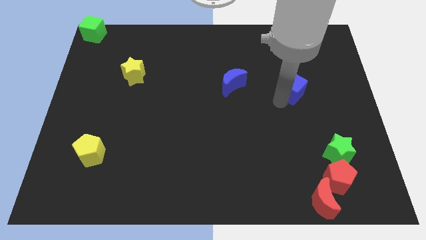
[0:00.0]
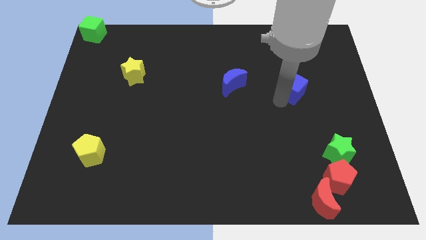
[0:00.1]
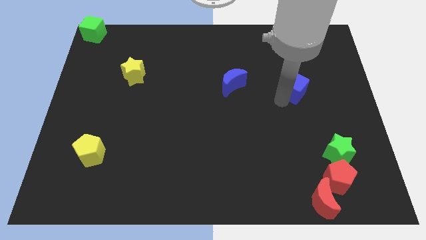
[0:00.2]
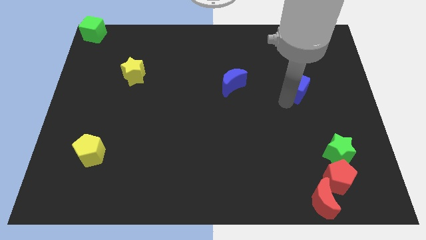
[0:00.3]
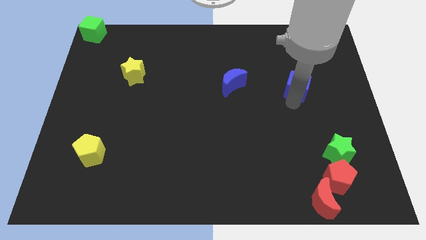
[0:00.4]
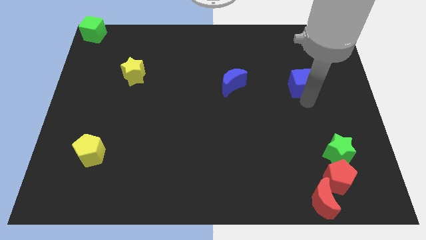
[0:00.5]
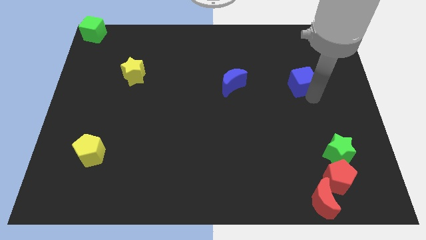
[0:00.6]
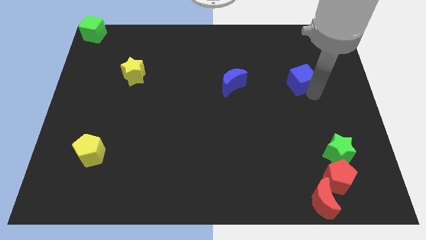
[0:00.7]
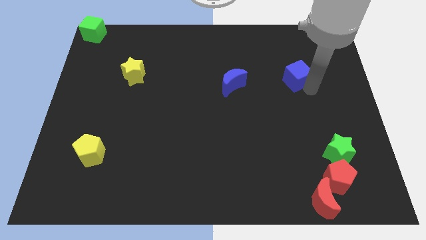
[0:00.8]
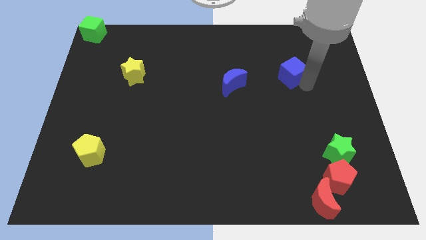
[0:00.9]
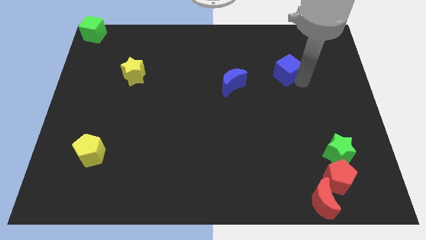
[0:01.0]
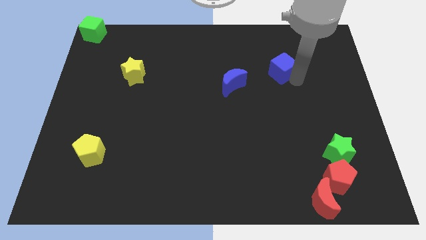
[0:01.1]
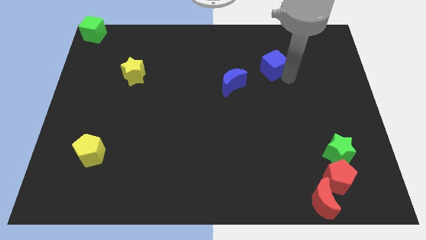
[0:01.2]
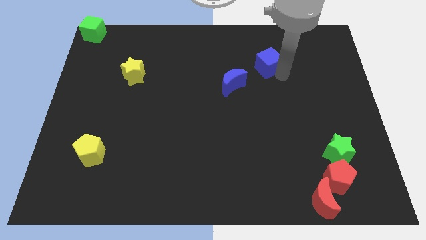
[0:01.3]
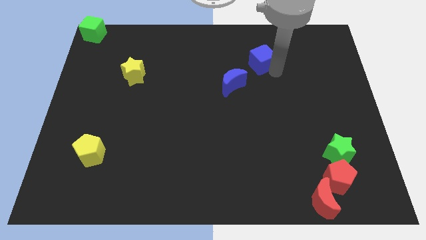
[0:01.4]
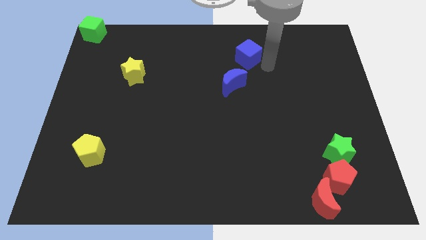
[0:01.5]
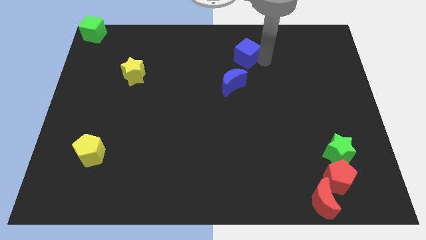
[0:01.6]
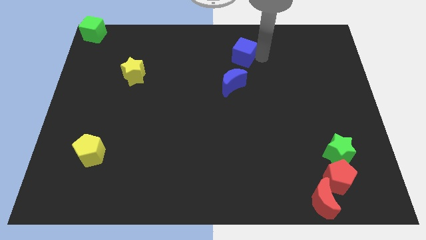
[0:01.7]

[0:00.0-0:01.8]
push the blue cube to the top side of the blue moon

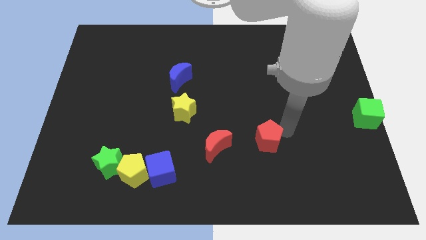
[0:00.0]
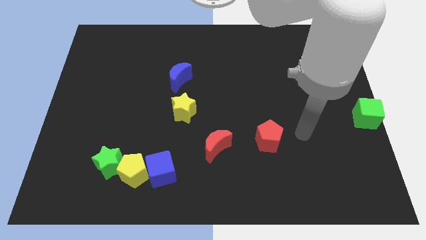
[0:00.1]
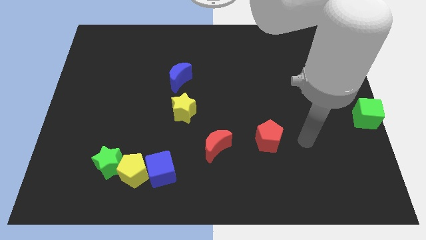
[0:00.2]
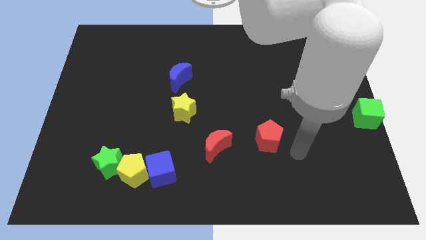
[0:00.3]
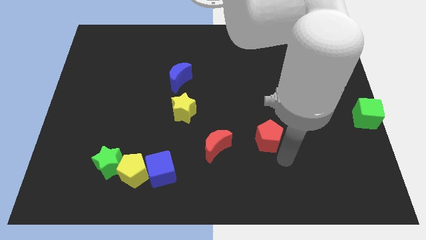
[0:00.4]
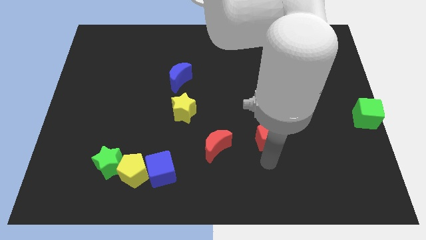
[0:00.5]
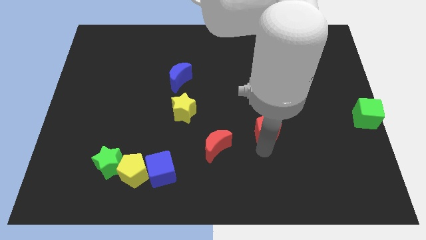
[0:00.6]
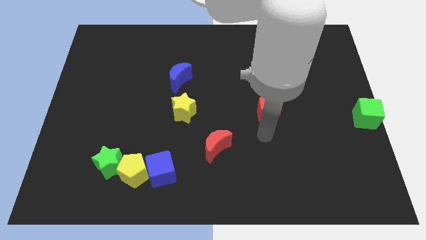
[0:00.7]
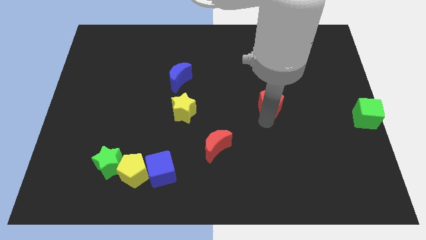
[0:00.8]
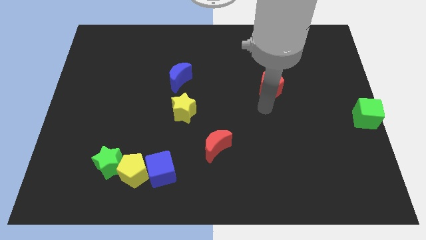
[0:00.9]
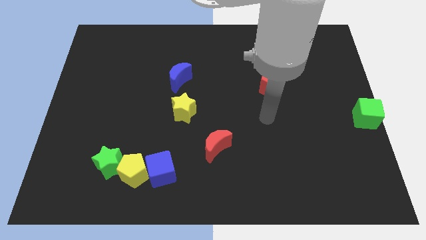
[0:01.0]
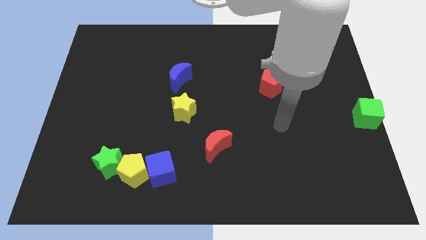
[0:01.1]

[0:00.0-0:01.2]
move the red pentagon up slightly

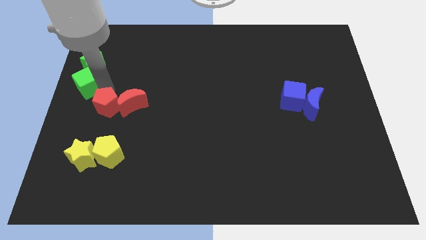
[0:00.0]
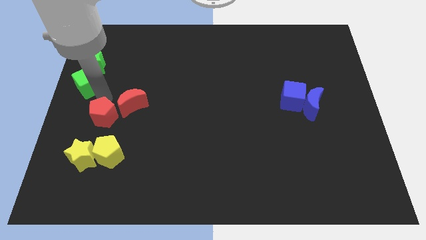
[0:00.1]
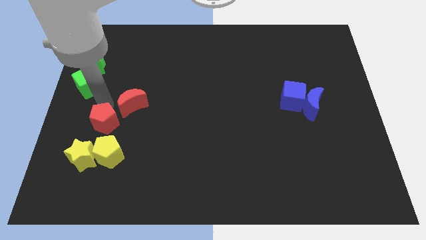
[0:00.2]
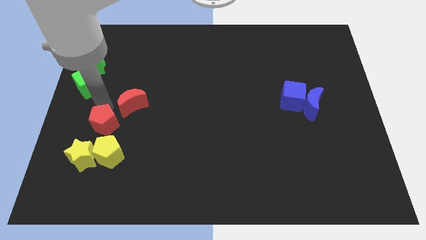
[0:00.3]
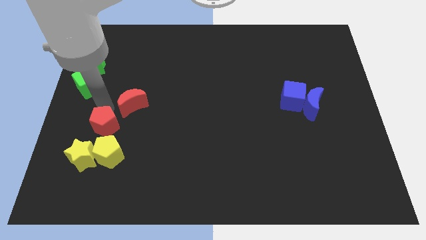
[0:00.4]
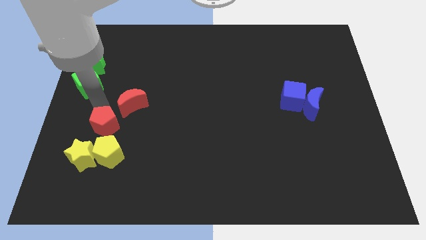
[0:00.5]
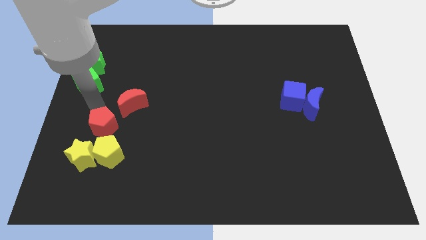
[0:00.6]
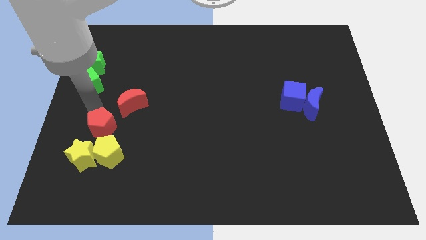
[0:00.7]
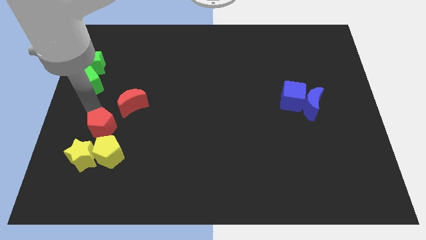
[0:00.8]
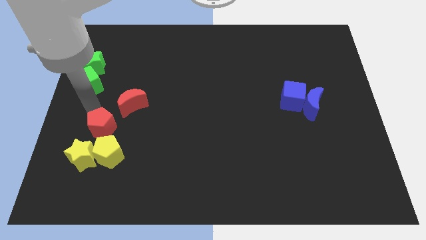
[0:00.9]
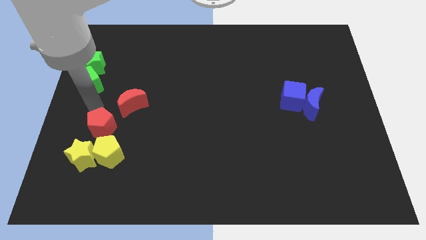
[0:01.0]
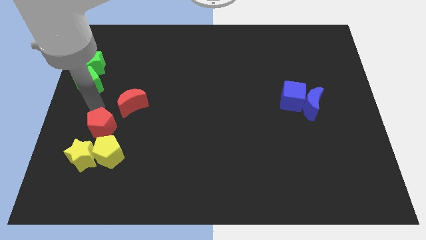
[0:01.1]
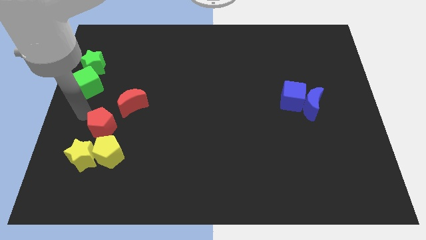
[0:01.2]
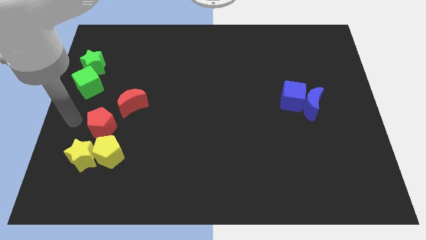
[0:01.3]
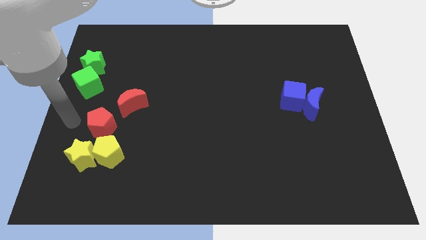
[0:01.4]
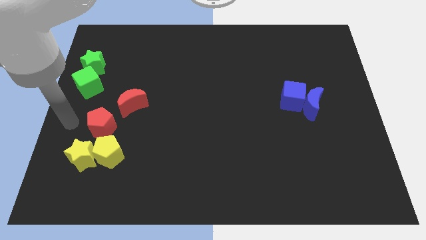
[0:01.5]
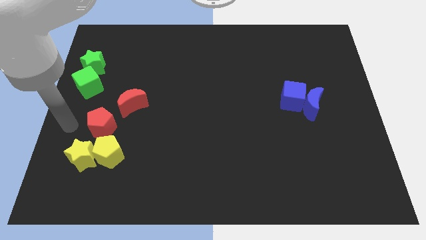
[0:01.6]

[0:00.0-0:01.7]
separate red pentagon from the red moon

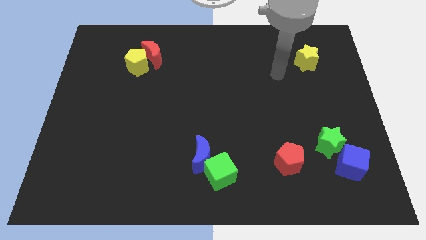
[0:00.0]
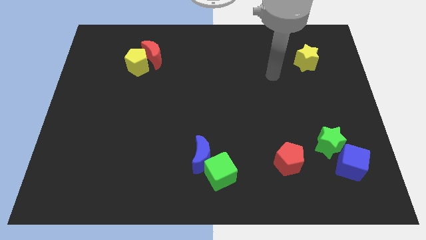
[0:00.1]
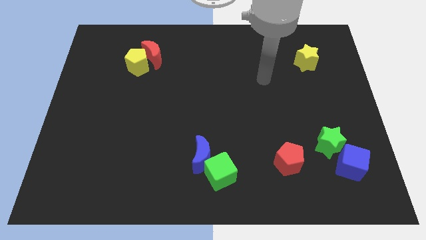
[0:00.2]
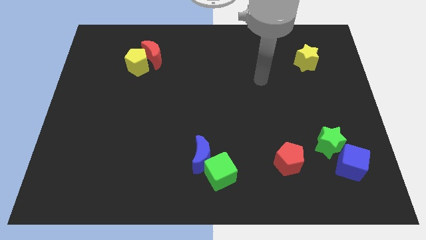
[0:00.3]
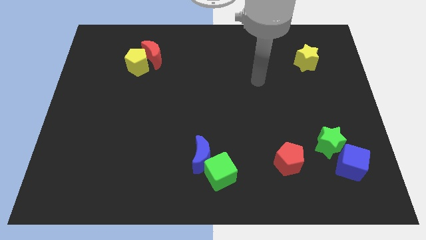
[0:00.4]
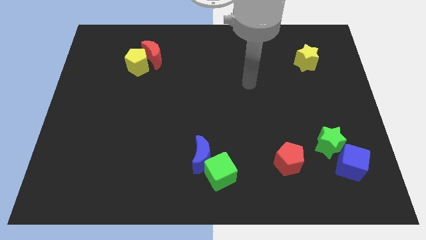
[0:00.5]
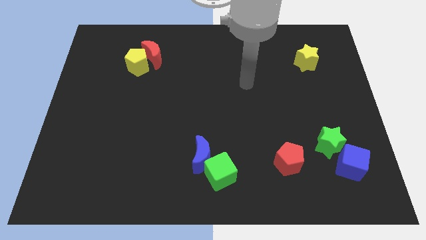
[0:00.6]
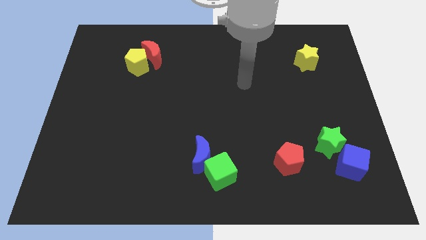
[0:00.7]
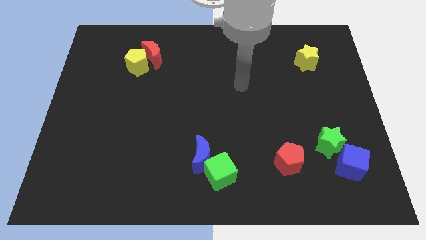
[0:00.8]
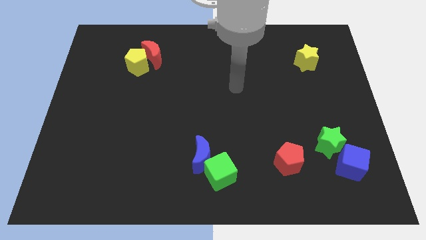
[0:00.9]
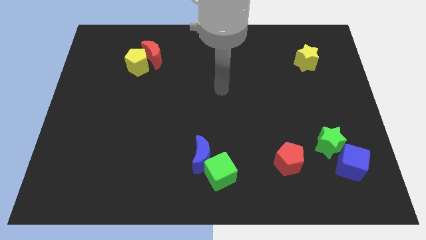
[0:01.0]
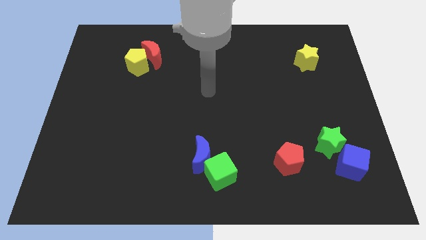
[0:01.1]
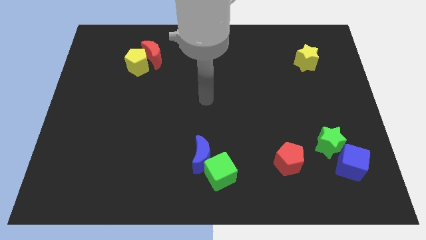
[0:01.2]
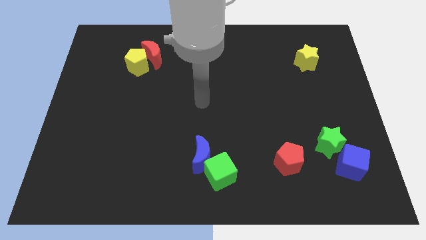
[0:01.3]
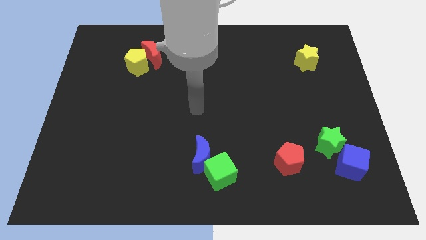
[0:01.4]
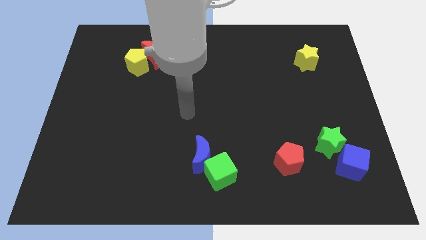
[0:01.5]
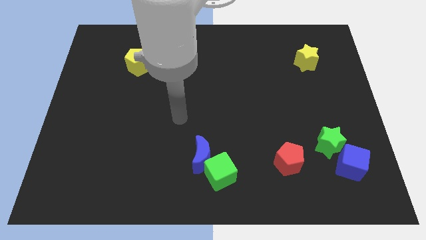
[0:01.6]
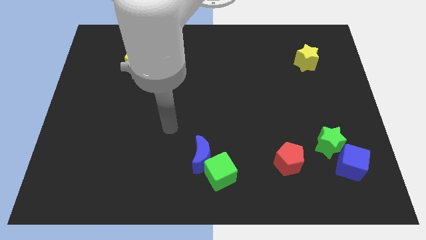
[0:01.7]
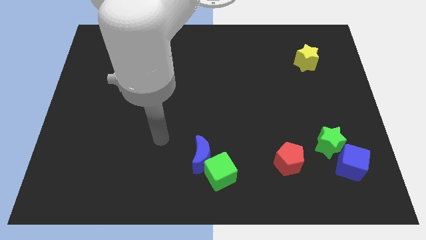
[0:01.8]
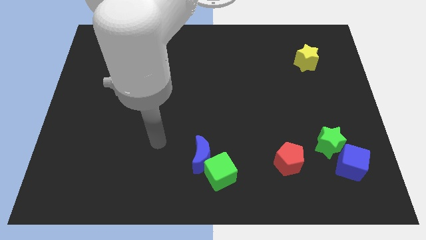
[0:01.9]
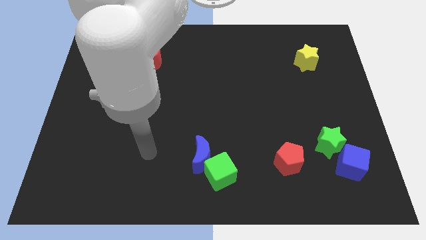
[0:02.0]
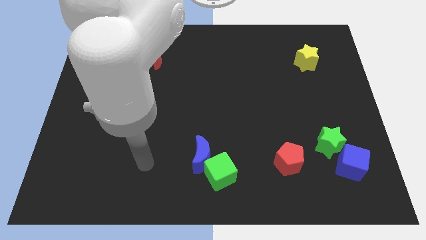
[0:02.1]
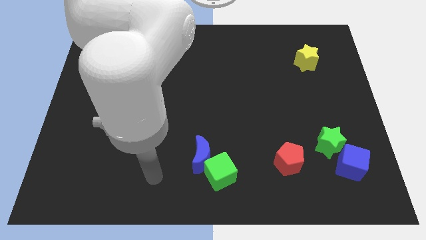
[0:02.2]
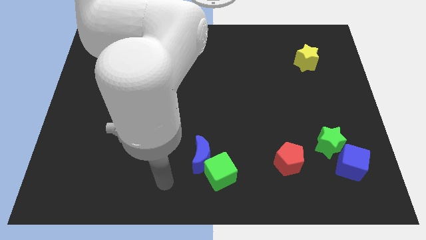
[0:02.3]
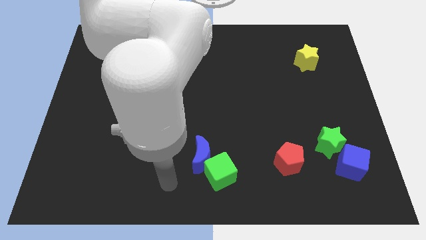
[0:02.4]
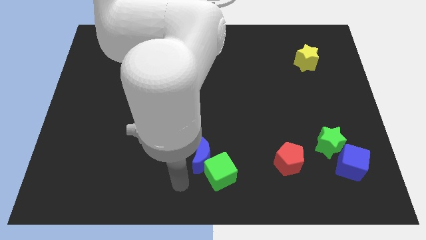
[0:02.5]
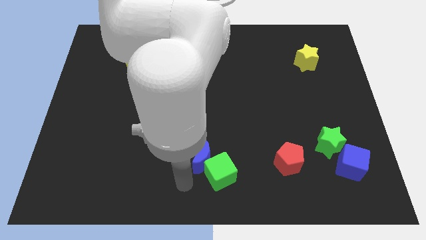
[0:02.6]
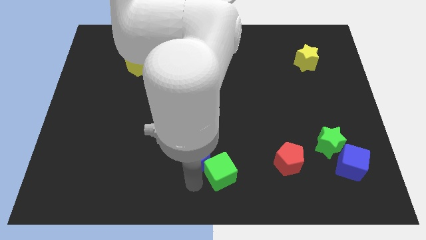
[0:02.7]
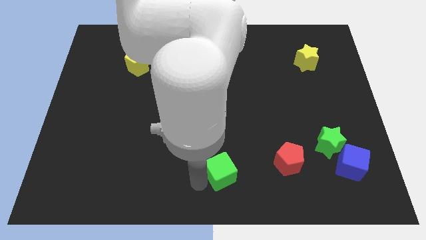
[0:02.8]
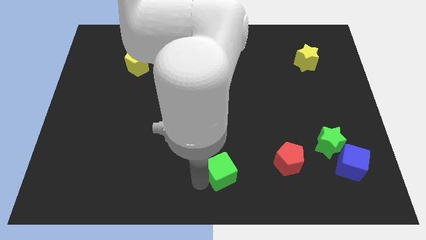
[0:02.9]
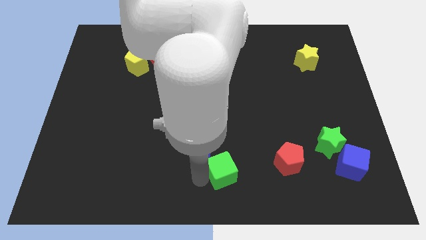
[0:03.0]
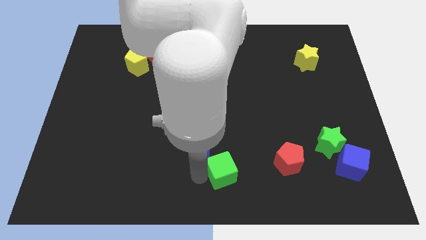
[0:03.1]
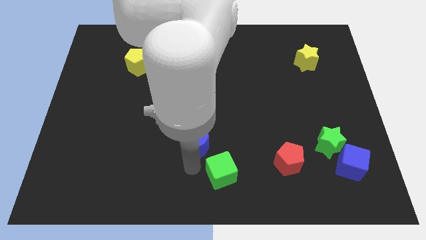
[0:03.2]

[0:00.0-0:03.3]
move arm near blue moon

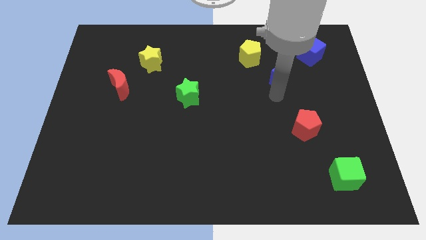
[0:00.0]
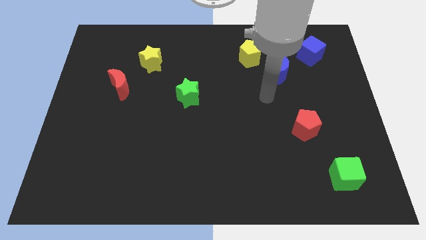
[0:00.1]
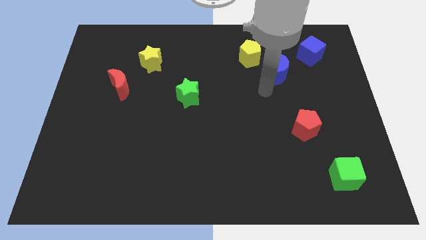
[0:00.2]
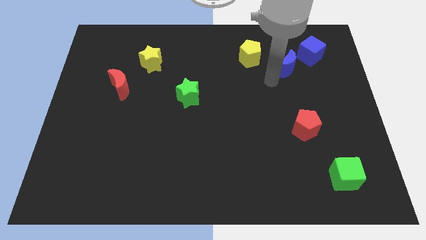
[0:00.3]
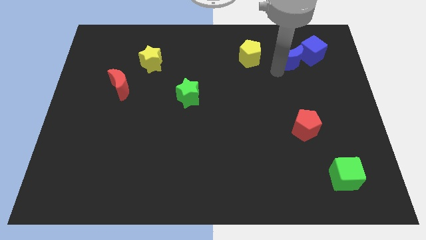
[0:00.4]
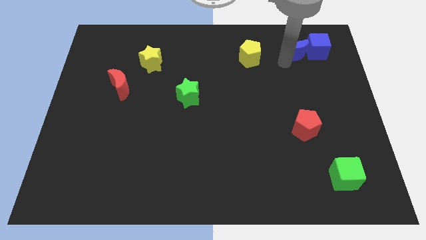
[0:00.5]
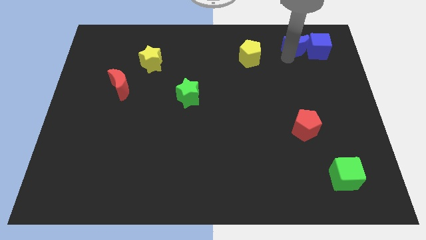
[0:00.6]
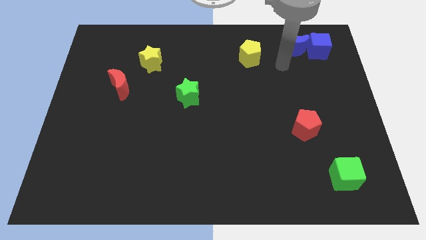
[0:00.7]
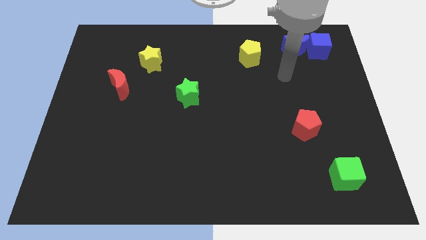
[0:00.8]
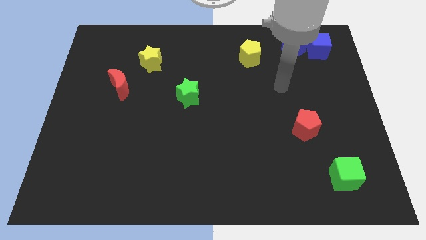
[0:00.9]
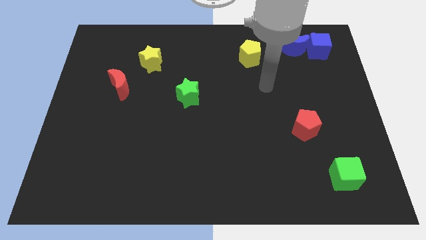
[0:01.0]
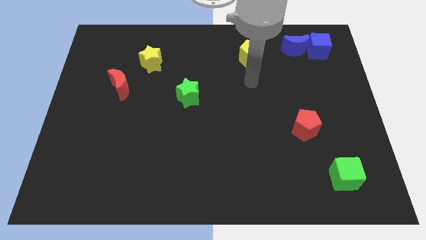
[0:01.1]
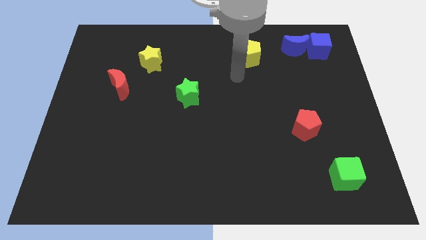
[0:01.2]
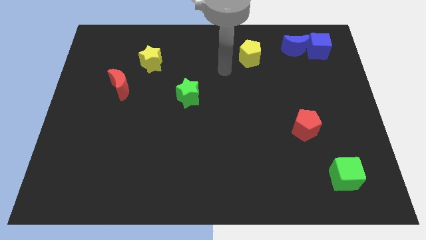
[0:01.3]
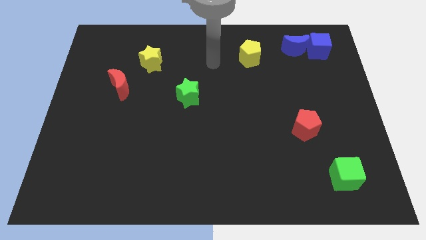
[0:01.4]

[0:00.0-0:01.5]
slide the blue moon into the blue cube
